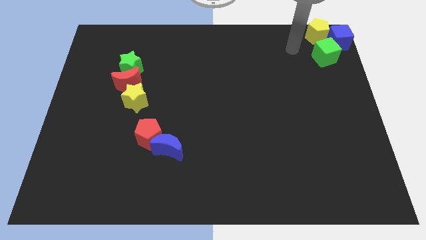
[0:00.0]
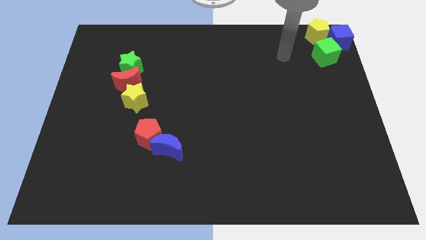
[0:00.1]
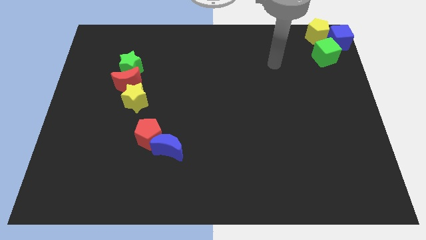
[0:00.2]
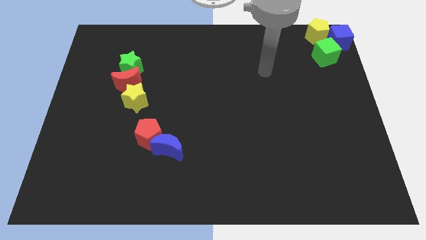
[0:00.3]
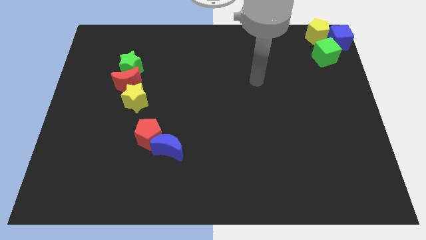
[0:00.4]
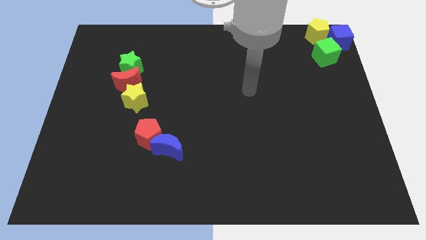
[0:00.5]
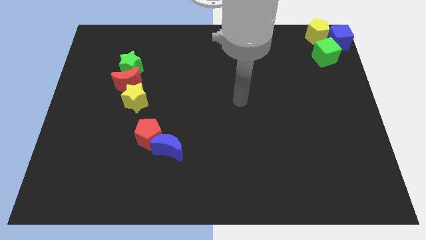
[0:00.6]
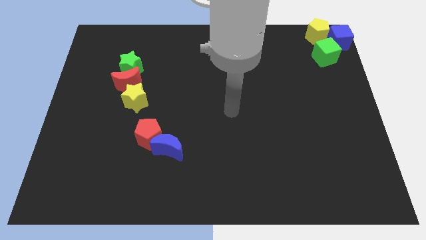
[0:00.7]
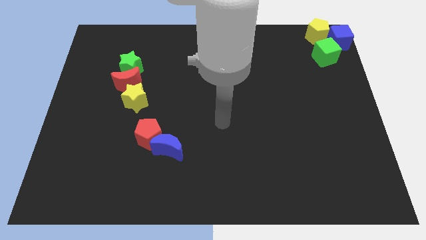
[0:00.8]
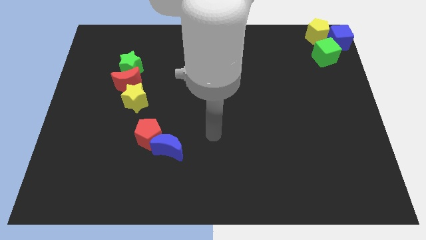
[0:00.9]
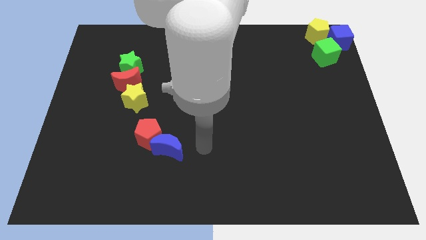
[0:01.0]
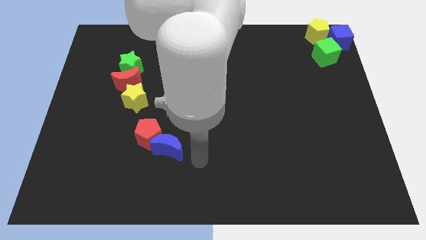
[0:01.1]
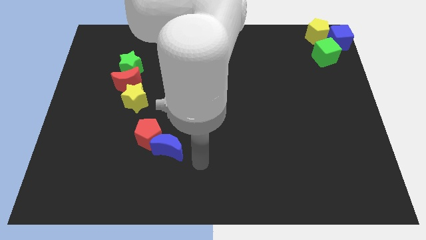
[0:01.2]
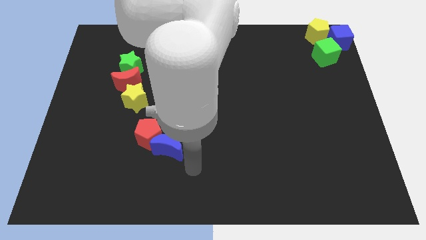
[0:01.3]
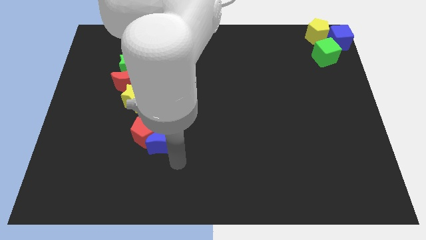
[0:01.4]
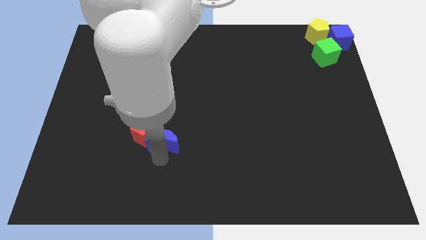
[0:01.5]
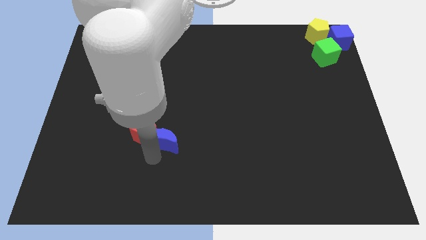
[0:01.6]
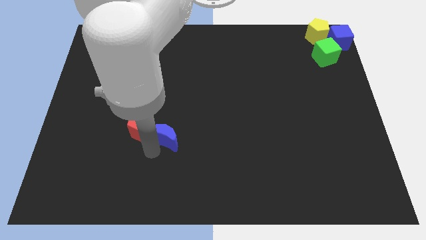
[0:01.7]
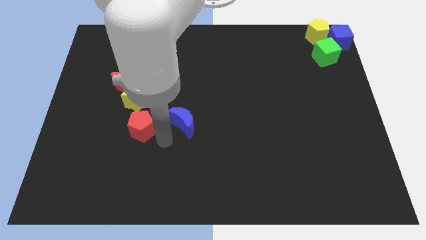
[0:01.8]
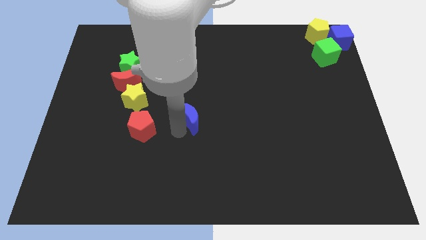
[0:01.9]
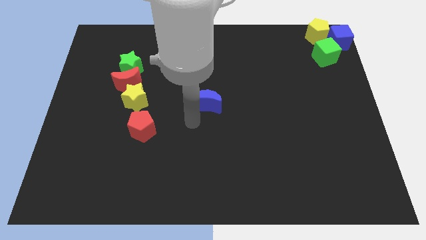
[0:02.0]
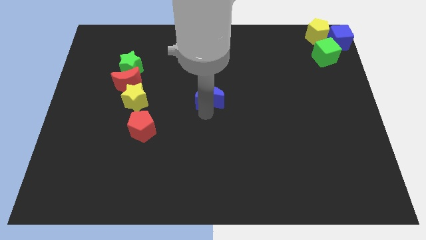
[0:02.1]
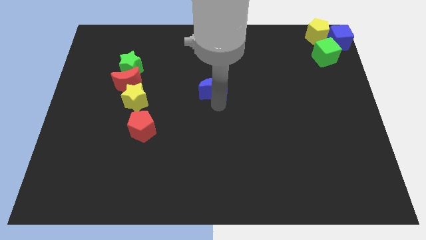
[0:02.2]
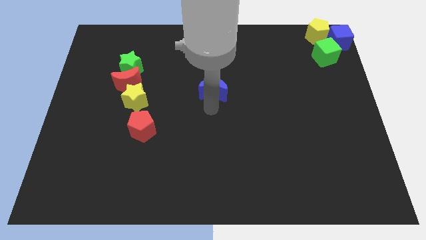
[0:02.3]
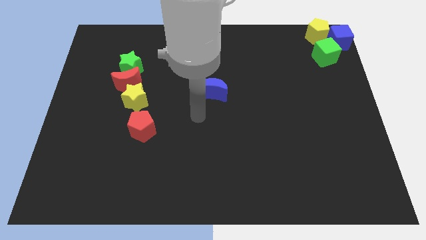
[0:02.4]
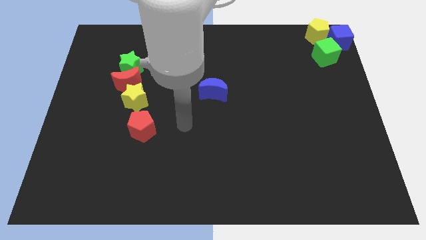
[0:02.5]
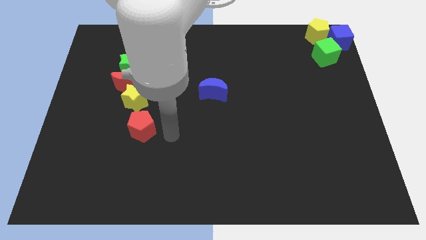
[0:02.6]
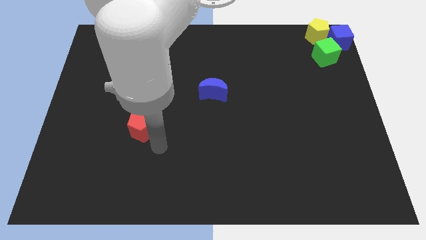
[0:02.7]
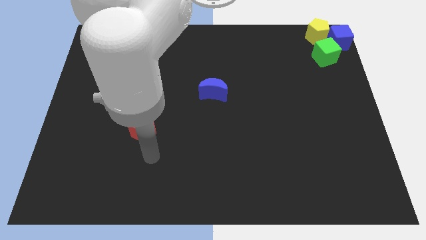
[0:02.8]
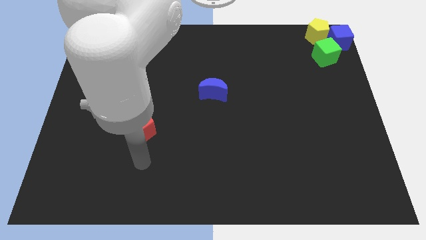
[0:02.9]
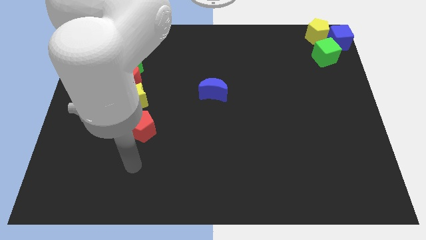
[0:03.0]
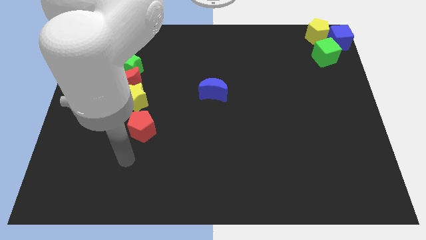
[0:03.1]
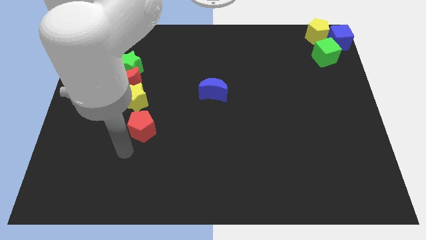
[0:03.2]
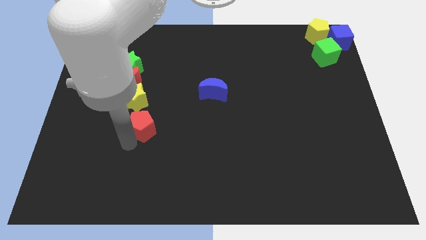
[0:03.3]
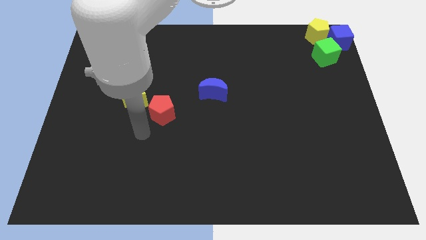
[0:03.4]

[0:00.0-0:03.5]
push the blue crescent to the center of the board

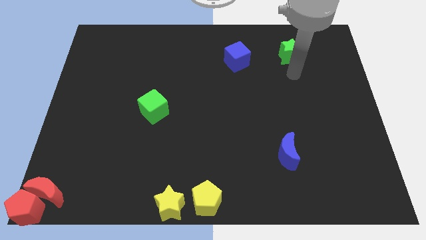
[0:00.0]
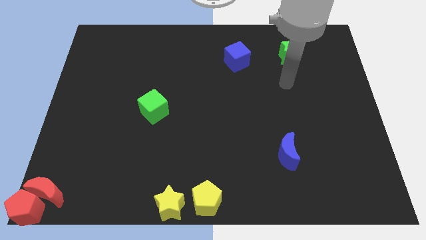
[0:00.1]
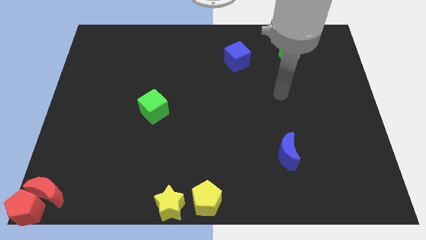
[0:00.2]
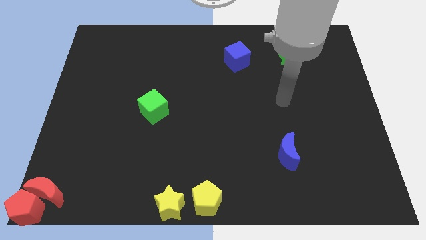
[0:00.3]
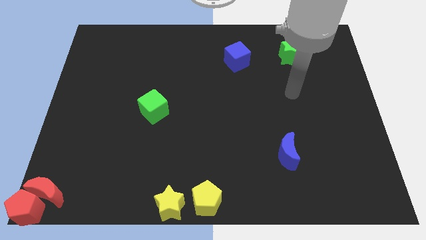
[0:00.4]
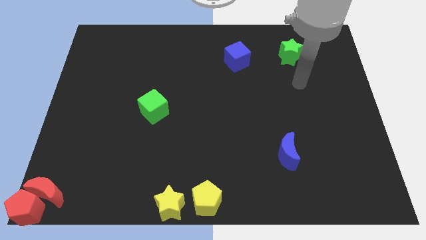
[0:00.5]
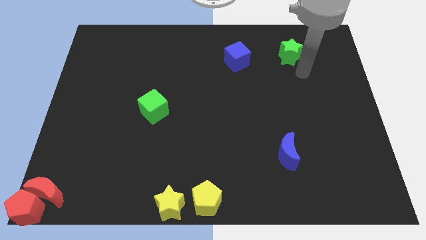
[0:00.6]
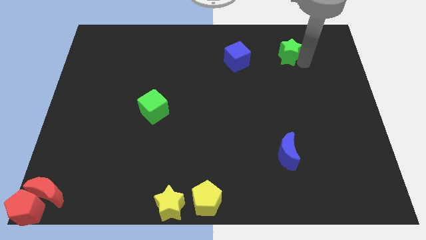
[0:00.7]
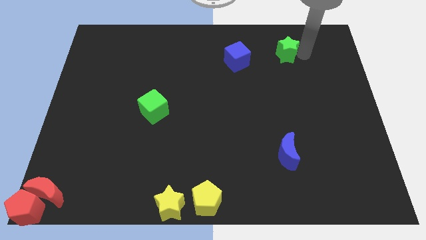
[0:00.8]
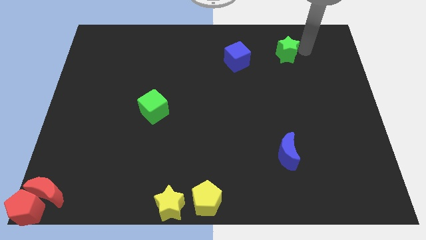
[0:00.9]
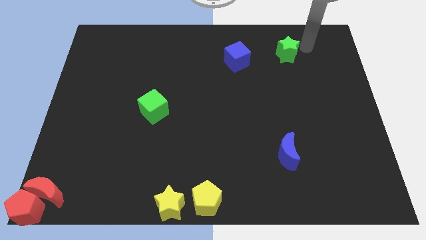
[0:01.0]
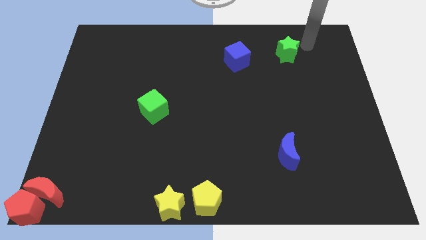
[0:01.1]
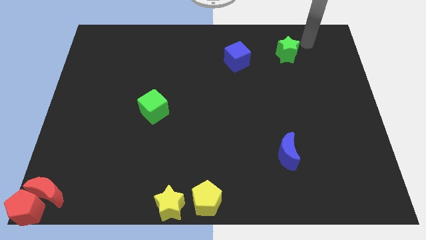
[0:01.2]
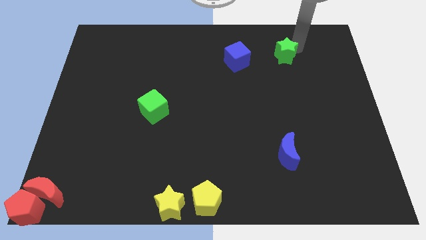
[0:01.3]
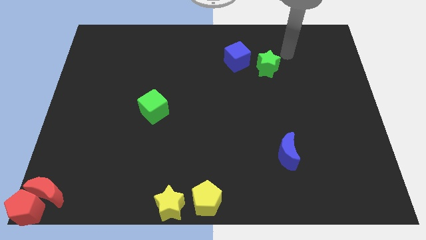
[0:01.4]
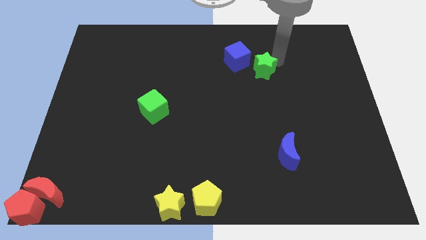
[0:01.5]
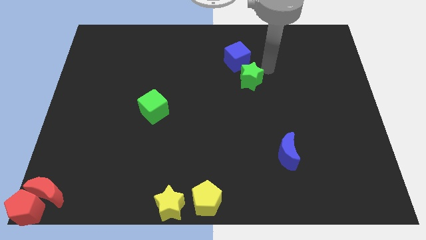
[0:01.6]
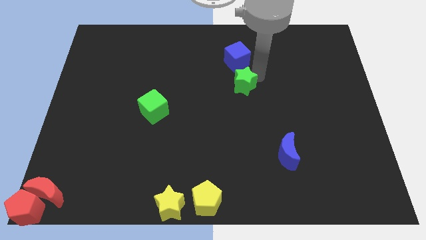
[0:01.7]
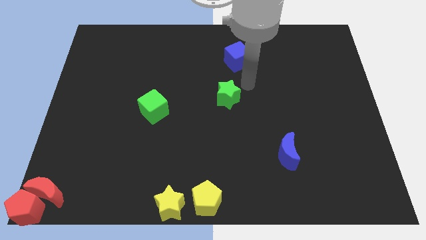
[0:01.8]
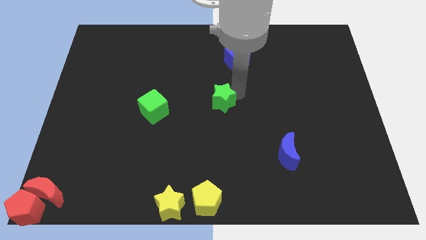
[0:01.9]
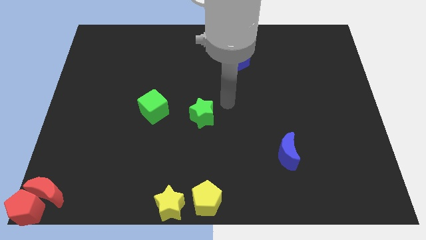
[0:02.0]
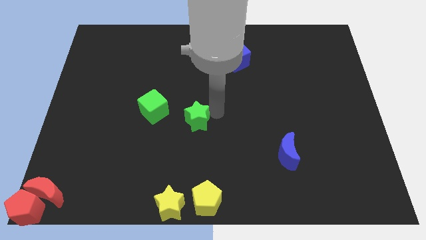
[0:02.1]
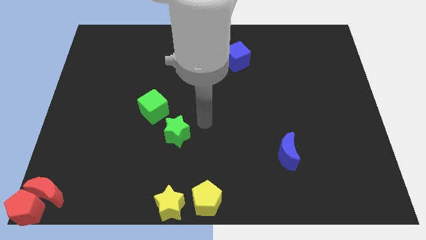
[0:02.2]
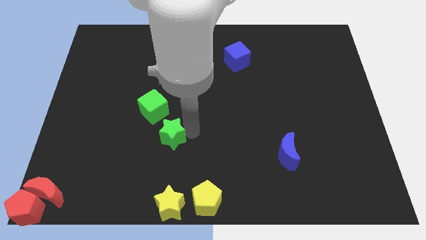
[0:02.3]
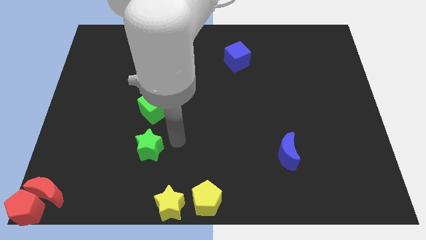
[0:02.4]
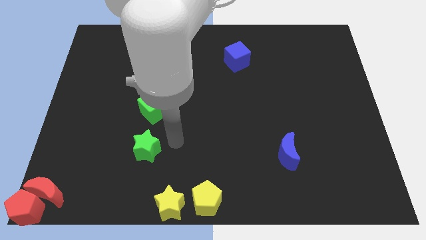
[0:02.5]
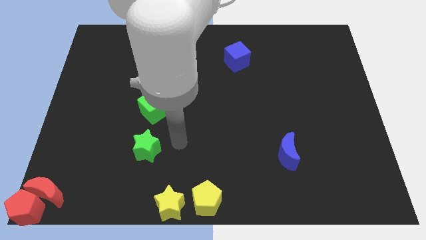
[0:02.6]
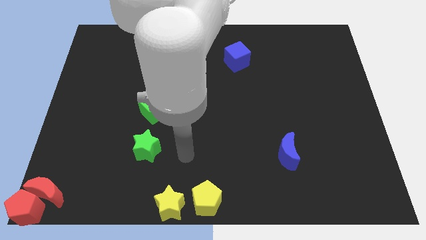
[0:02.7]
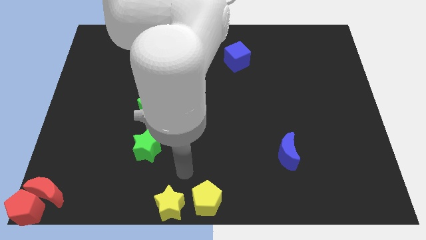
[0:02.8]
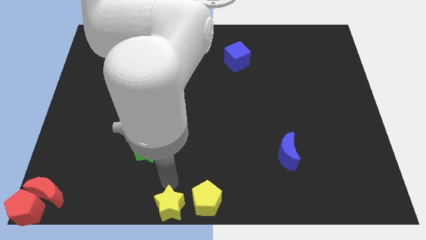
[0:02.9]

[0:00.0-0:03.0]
push the green star to the bottom side of the green cube

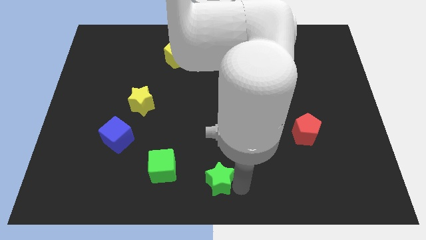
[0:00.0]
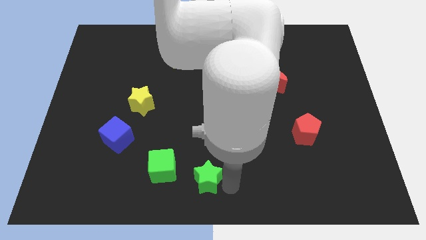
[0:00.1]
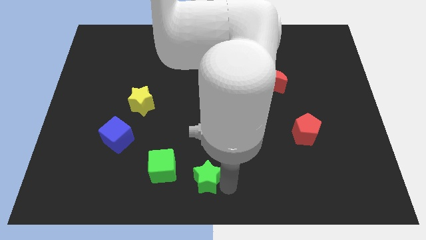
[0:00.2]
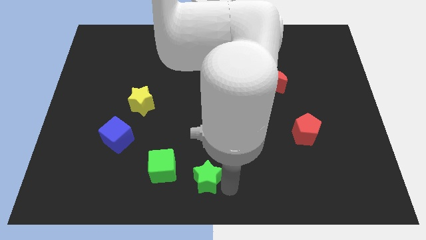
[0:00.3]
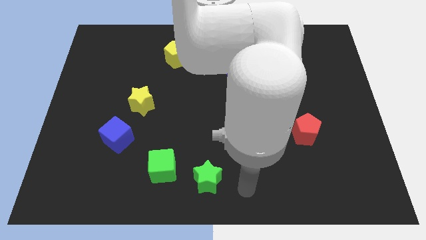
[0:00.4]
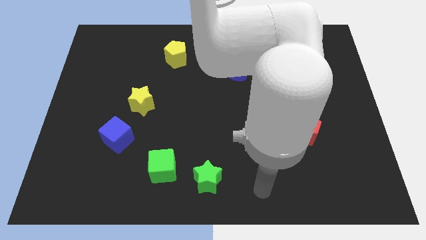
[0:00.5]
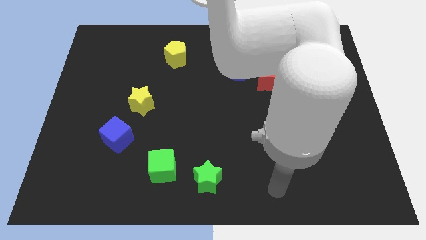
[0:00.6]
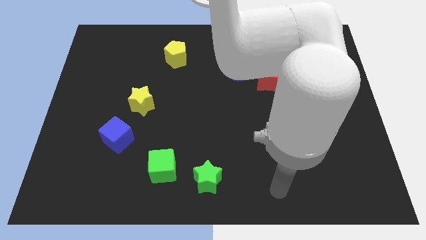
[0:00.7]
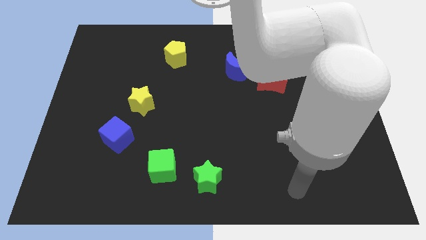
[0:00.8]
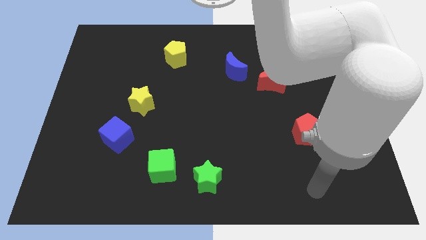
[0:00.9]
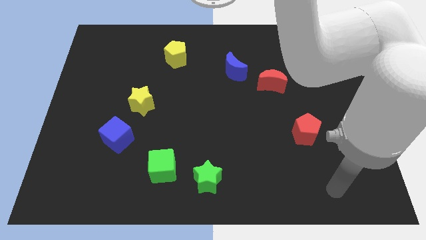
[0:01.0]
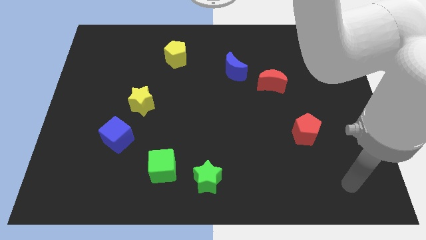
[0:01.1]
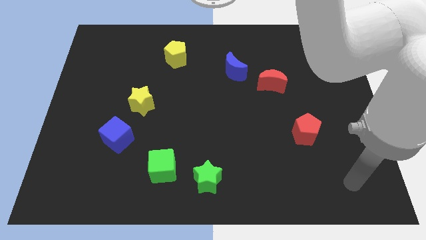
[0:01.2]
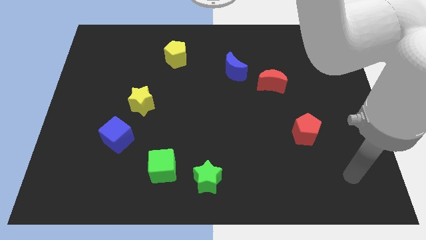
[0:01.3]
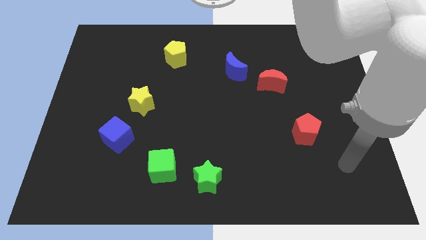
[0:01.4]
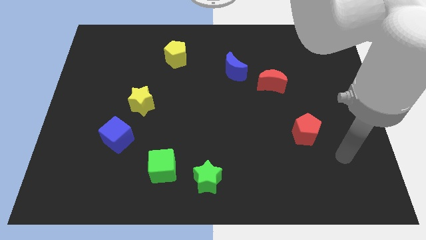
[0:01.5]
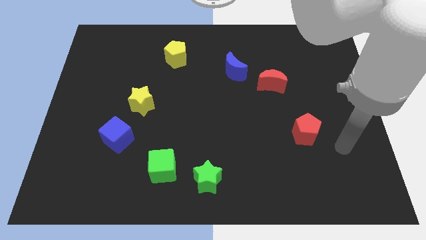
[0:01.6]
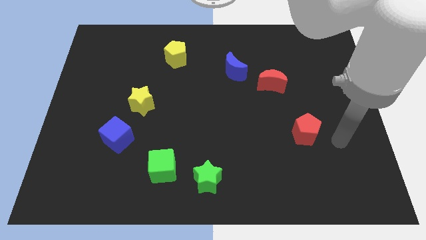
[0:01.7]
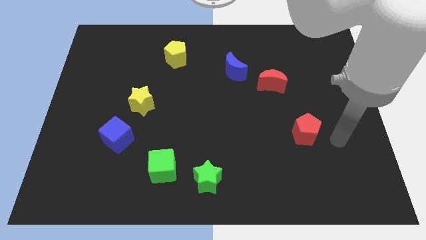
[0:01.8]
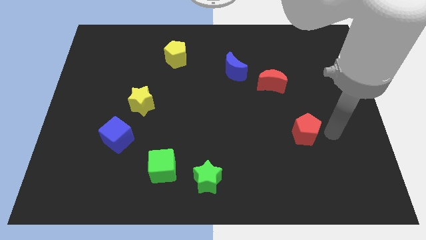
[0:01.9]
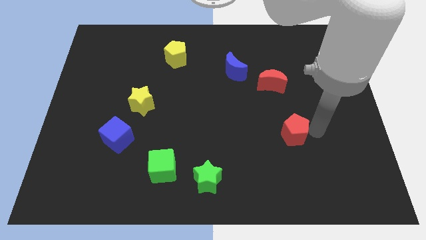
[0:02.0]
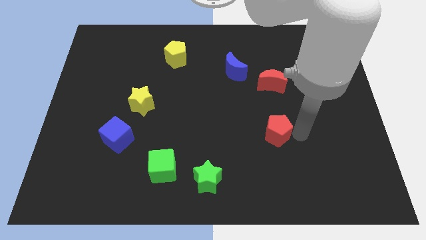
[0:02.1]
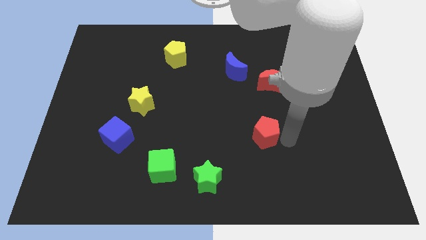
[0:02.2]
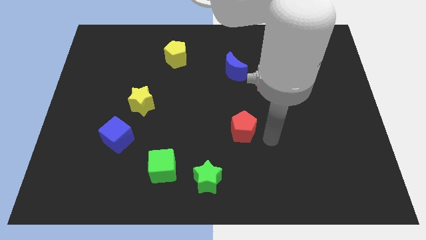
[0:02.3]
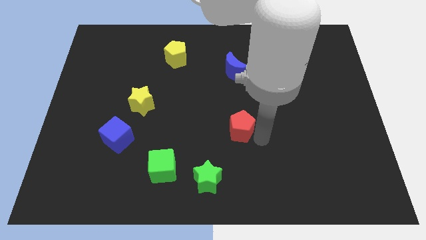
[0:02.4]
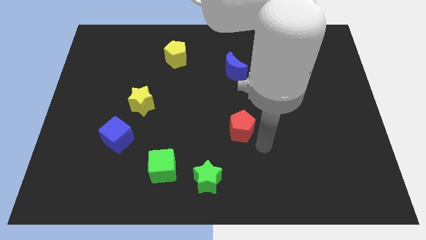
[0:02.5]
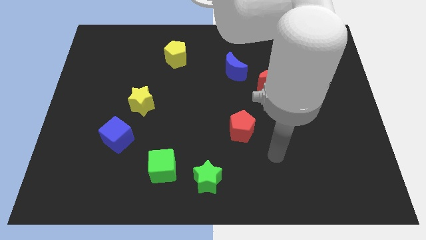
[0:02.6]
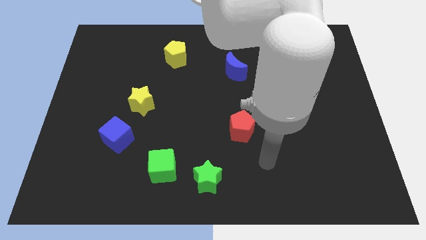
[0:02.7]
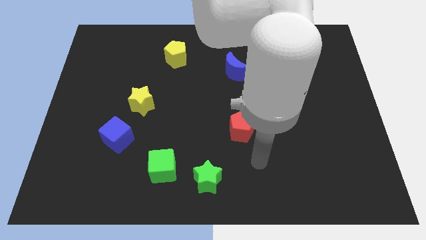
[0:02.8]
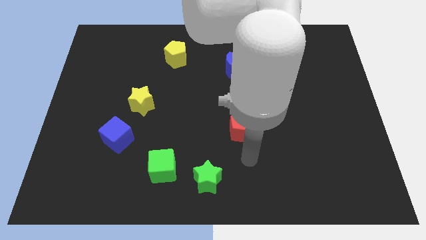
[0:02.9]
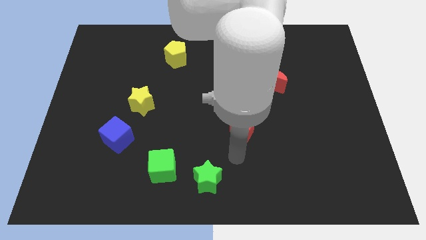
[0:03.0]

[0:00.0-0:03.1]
slide the red pentagon towards the center
